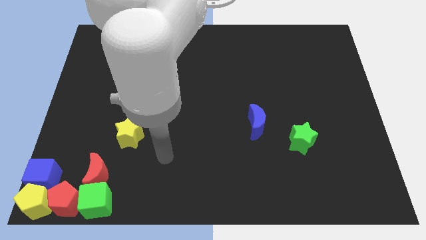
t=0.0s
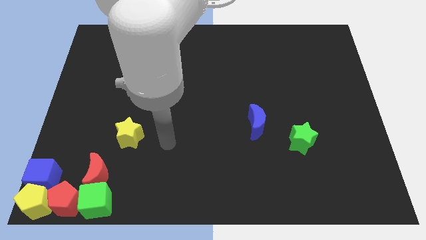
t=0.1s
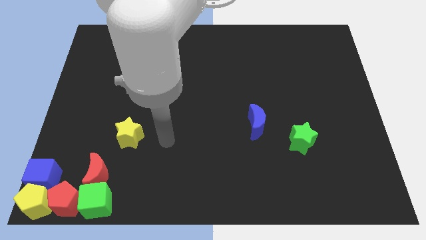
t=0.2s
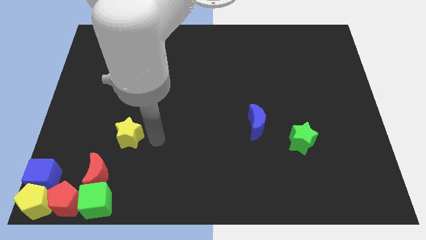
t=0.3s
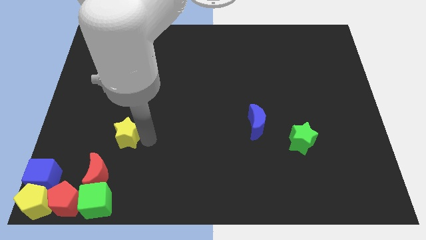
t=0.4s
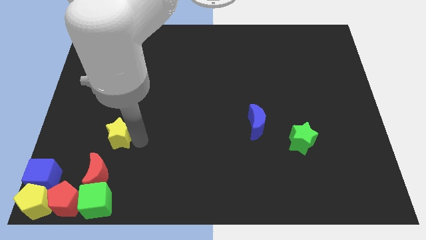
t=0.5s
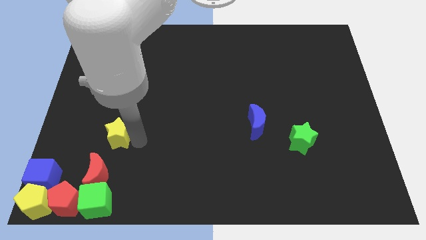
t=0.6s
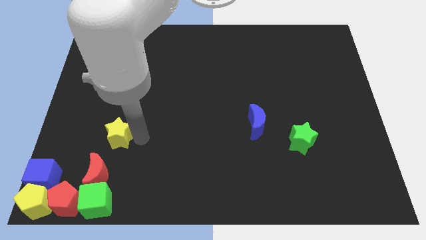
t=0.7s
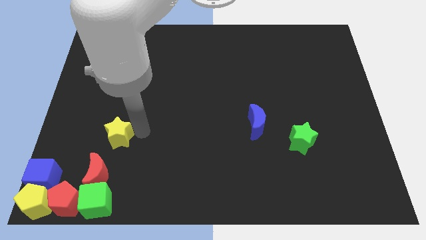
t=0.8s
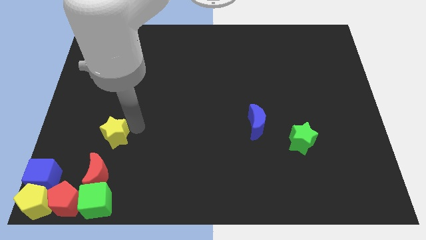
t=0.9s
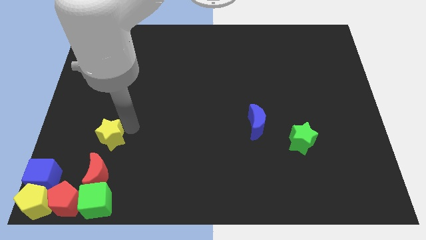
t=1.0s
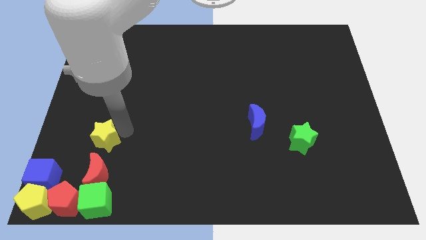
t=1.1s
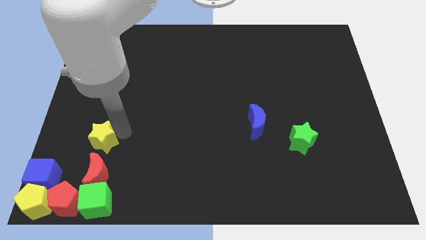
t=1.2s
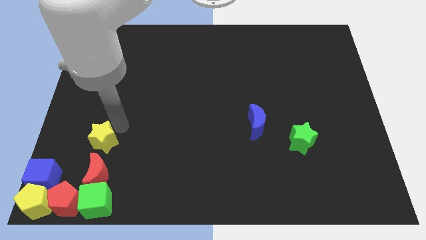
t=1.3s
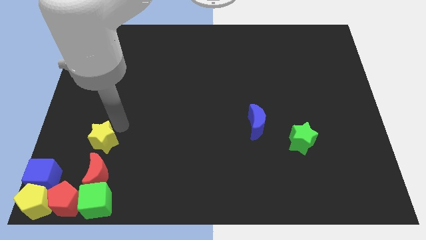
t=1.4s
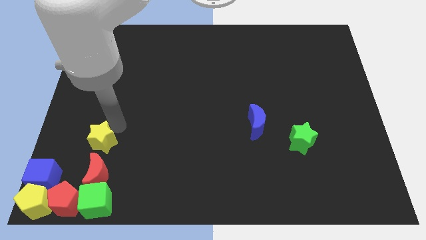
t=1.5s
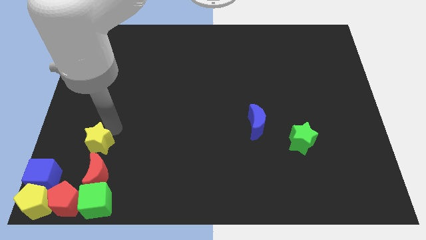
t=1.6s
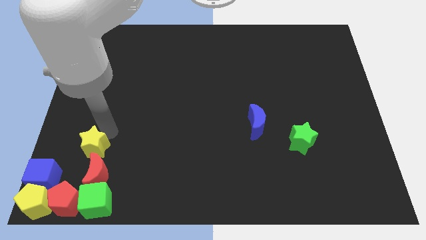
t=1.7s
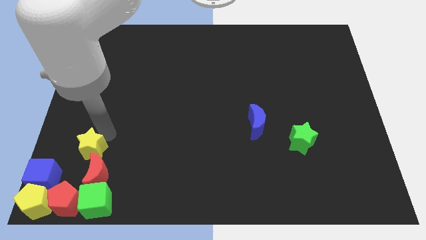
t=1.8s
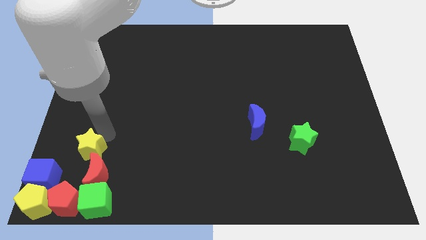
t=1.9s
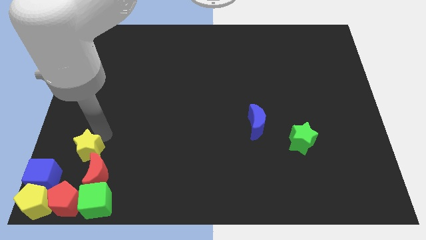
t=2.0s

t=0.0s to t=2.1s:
move the star near to the red moon

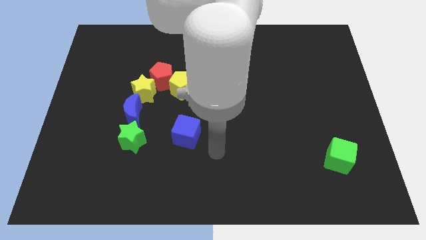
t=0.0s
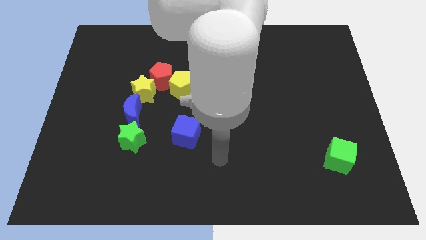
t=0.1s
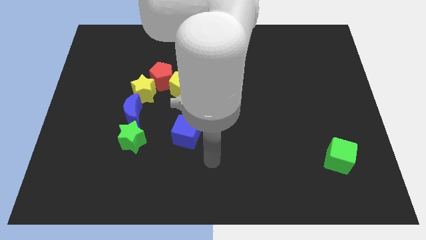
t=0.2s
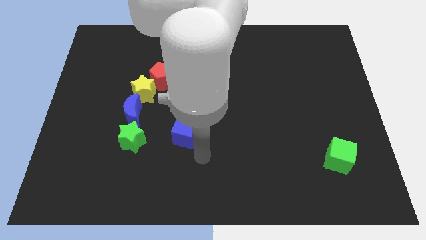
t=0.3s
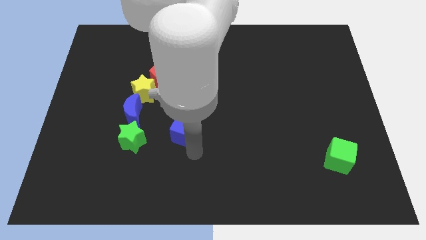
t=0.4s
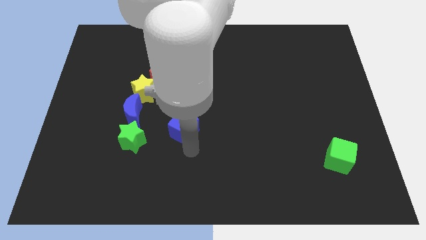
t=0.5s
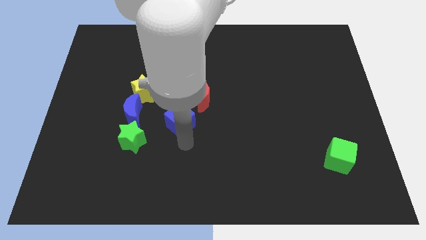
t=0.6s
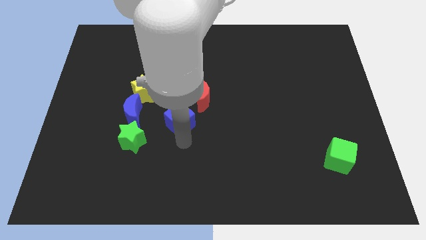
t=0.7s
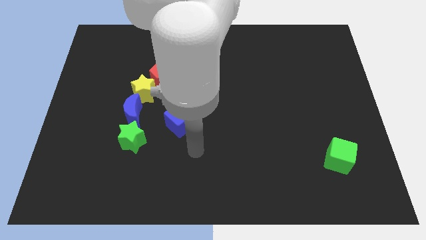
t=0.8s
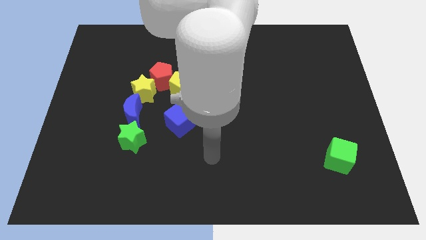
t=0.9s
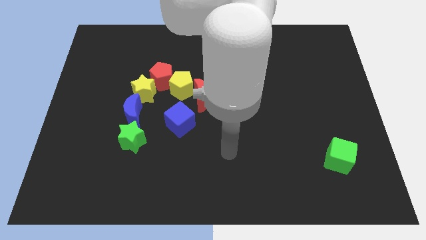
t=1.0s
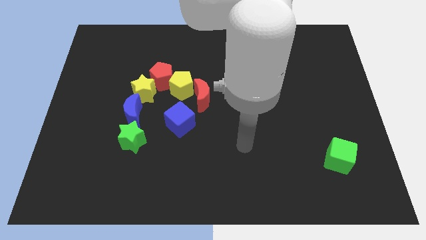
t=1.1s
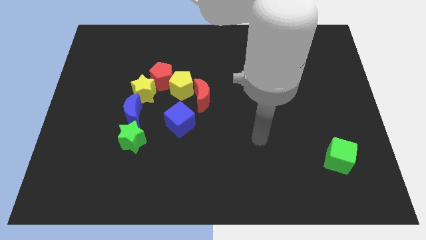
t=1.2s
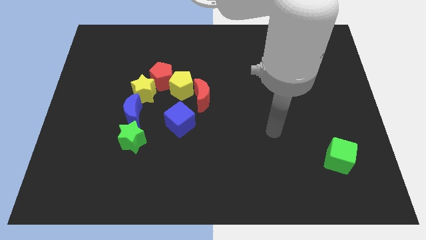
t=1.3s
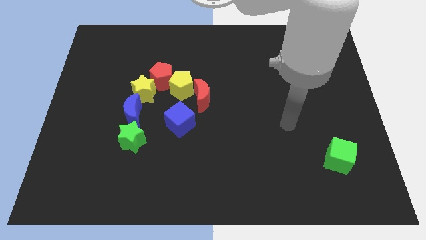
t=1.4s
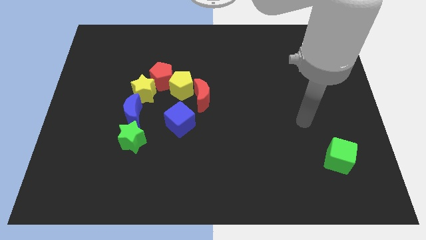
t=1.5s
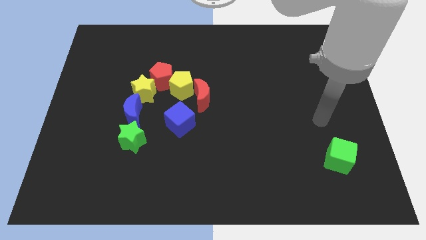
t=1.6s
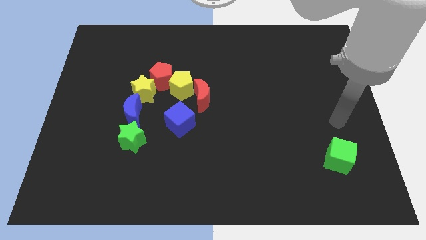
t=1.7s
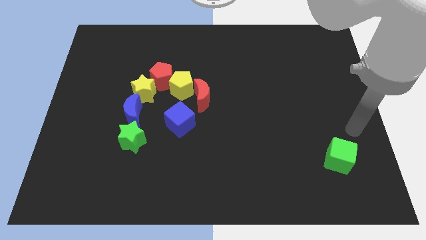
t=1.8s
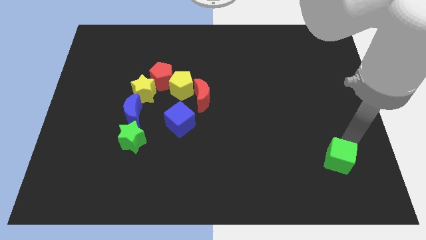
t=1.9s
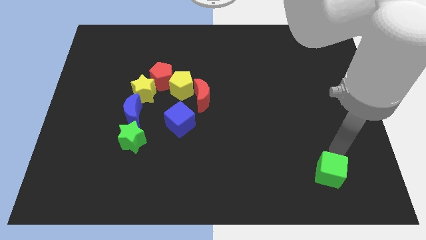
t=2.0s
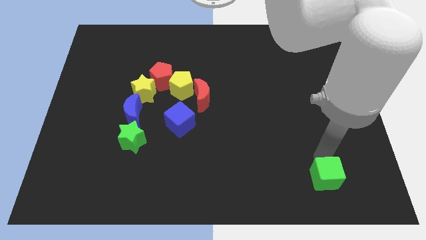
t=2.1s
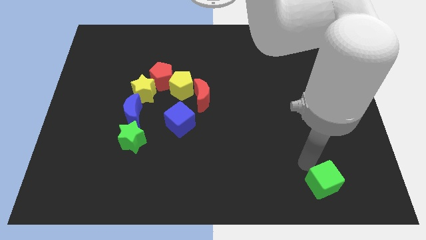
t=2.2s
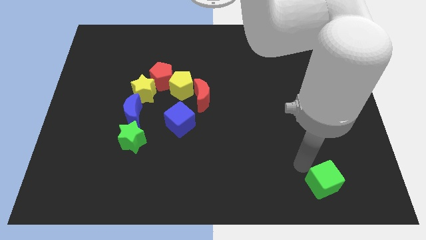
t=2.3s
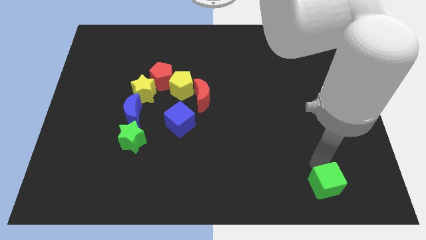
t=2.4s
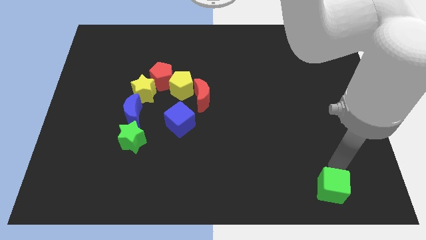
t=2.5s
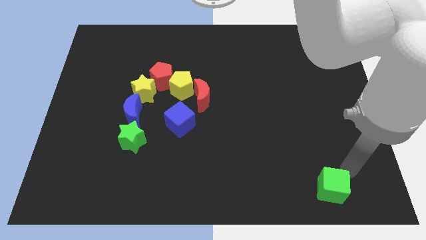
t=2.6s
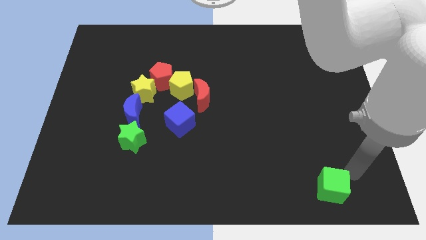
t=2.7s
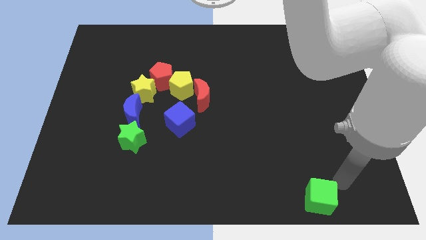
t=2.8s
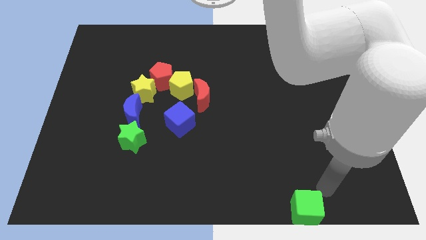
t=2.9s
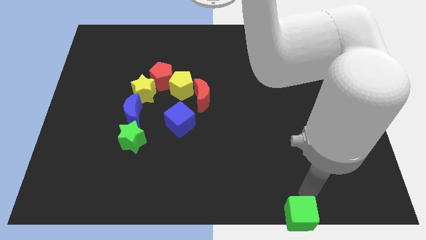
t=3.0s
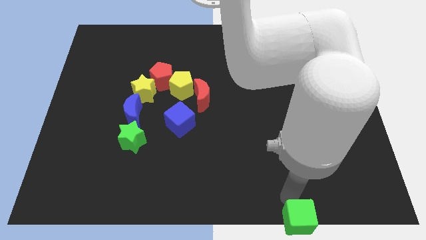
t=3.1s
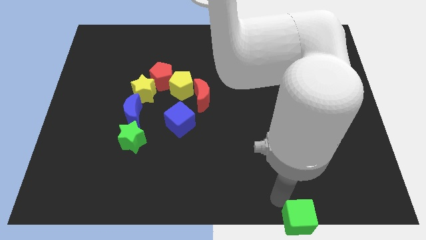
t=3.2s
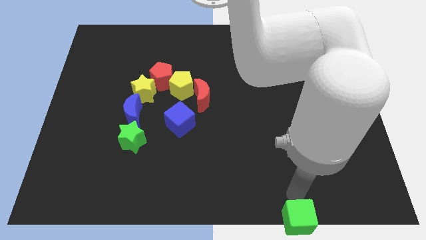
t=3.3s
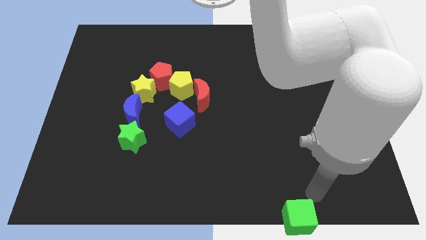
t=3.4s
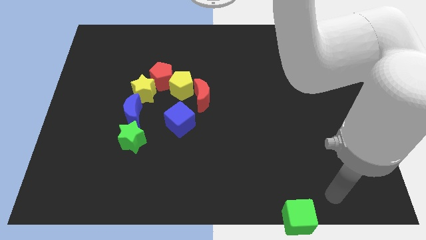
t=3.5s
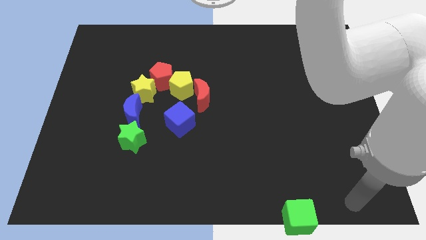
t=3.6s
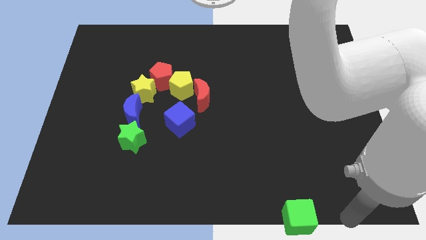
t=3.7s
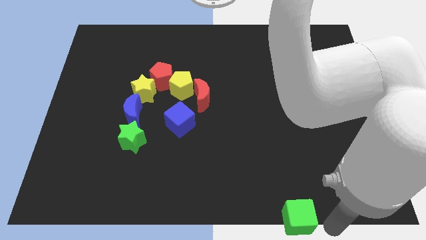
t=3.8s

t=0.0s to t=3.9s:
push the green cube to the bottom side of the board

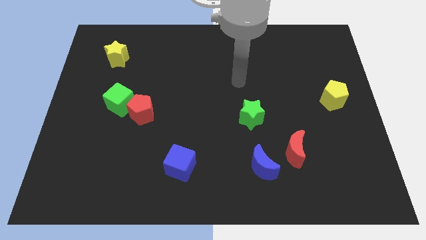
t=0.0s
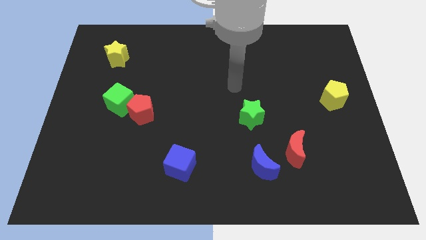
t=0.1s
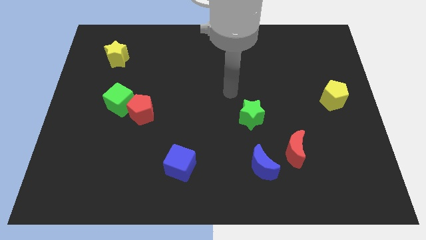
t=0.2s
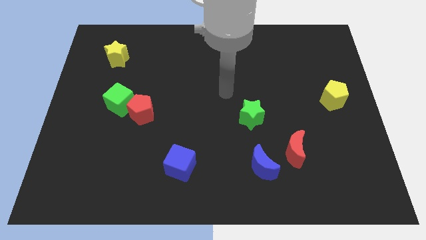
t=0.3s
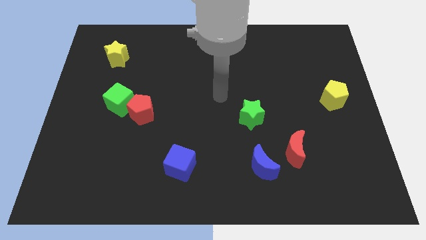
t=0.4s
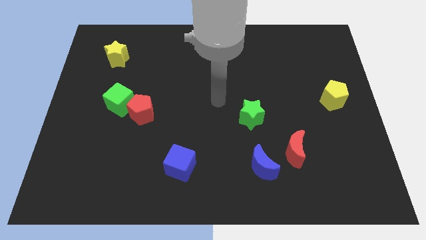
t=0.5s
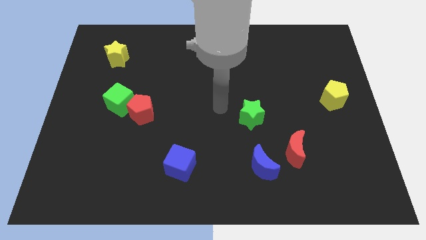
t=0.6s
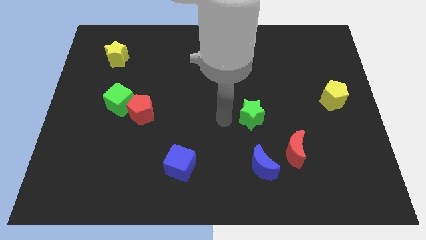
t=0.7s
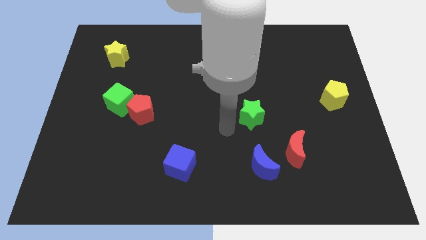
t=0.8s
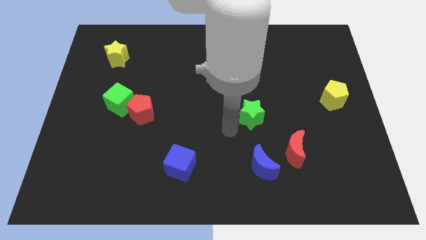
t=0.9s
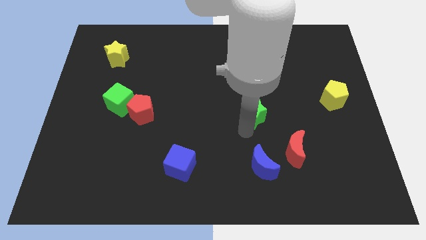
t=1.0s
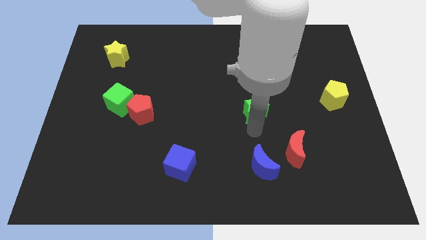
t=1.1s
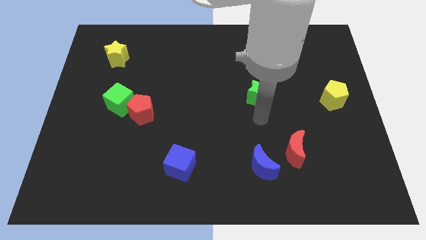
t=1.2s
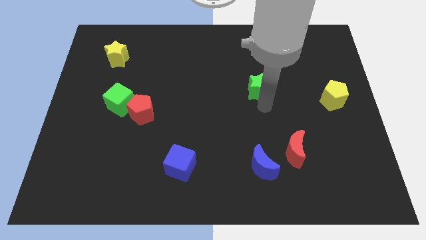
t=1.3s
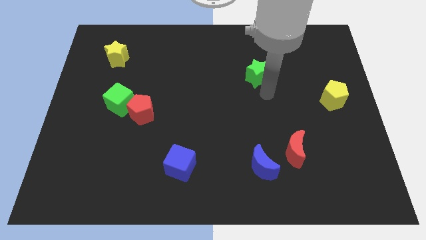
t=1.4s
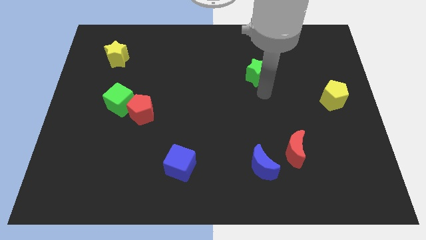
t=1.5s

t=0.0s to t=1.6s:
move the green star vertically to the top side of the blue crescent

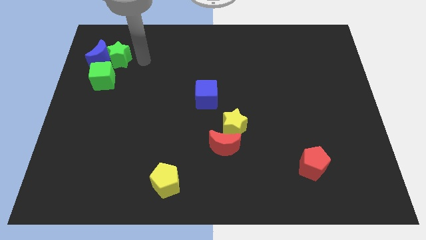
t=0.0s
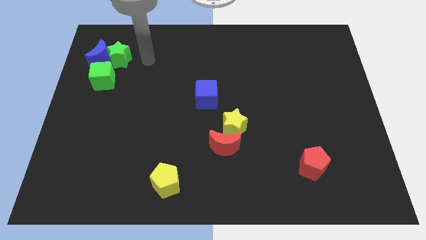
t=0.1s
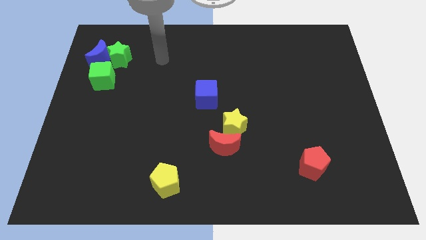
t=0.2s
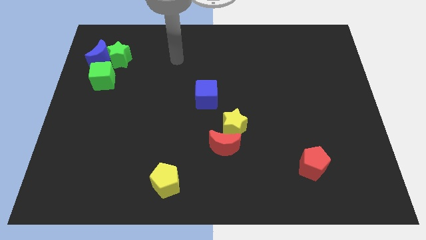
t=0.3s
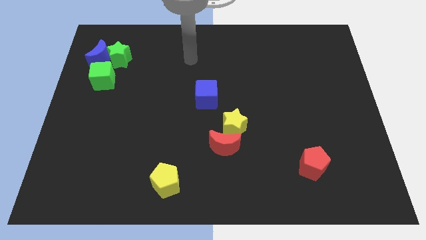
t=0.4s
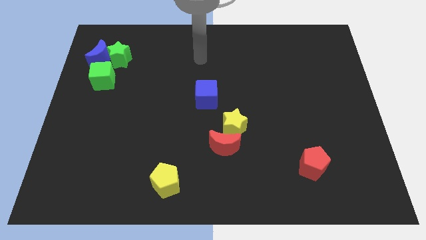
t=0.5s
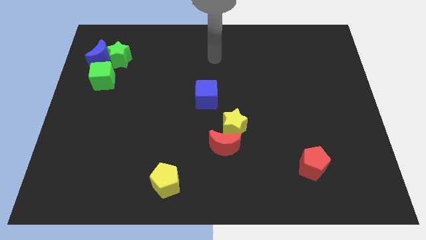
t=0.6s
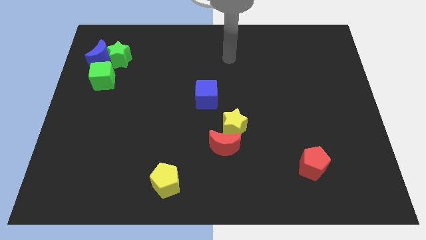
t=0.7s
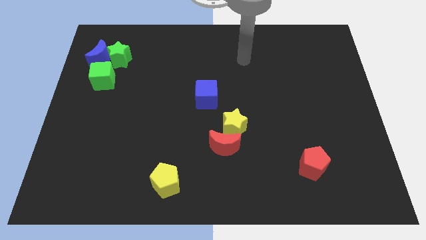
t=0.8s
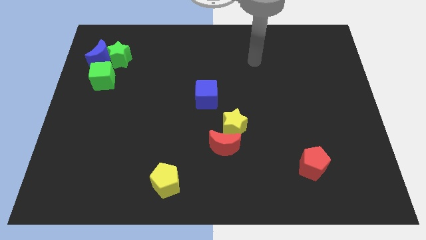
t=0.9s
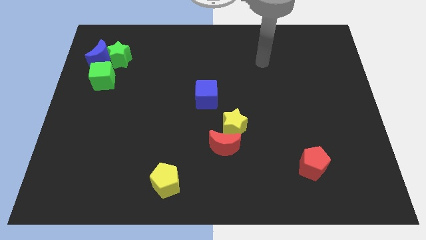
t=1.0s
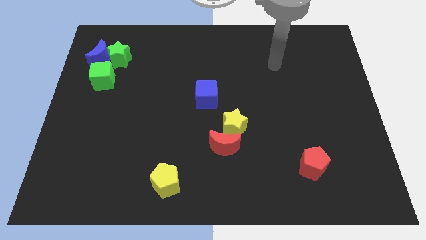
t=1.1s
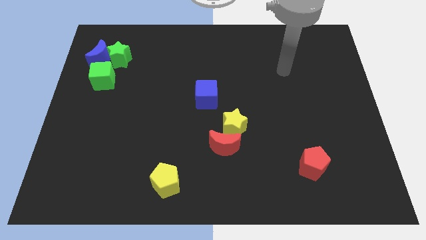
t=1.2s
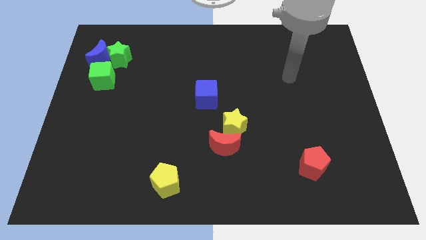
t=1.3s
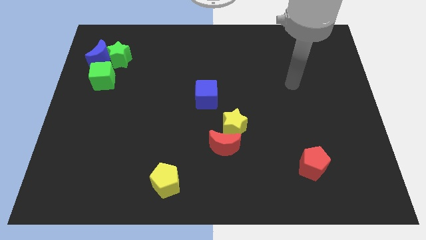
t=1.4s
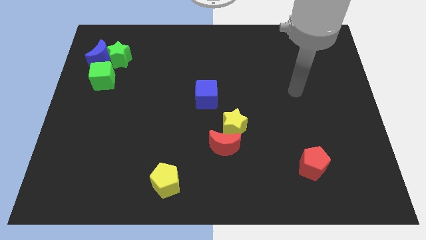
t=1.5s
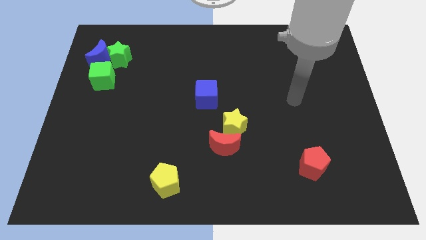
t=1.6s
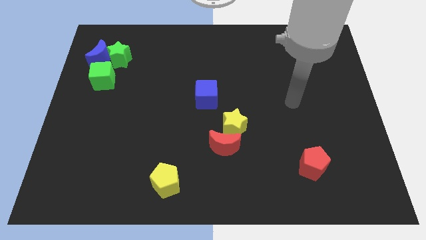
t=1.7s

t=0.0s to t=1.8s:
move the arm away from the green star
